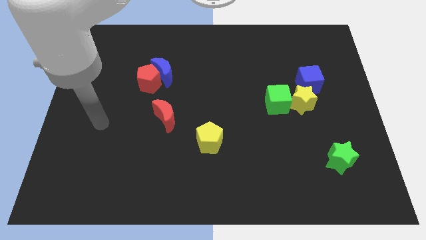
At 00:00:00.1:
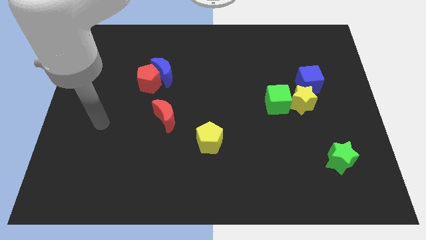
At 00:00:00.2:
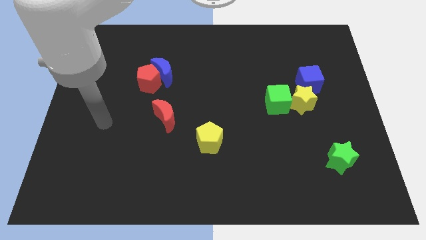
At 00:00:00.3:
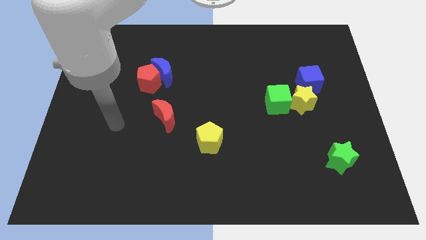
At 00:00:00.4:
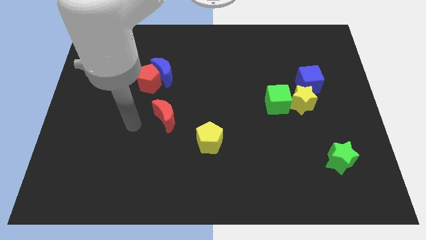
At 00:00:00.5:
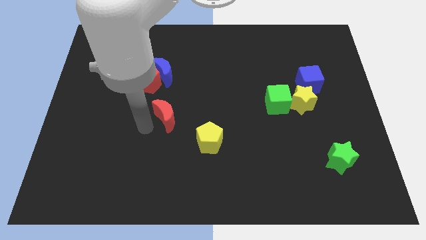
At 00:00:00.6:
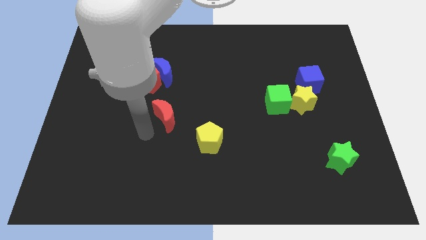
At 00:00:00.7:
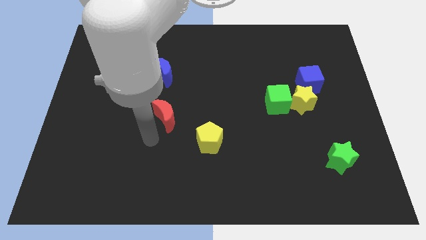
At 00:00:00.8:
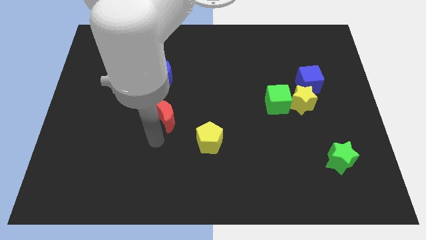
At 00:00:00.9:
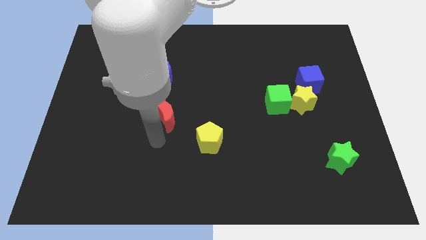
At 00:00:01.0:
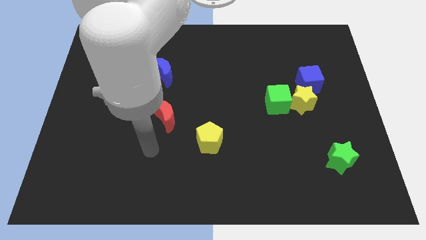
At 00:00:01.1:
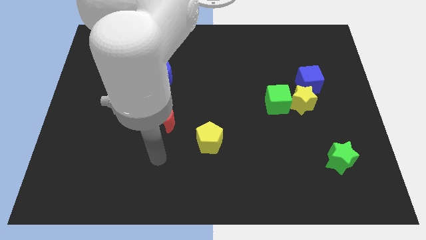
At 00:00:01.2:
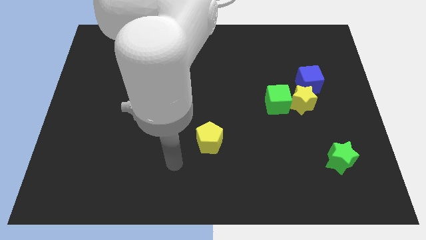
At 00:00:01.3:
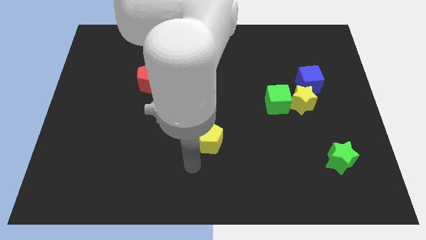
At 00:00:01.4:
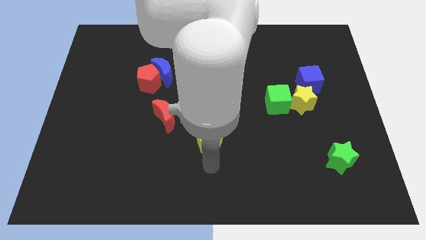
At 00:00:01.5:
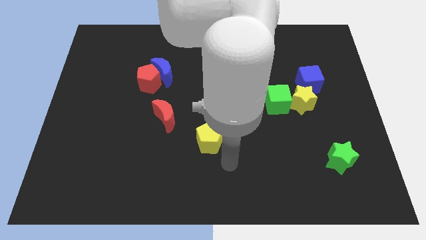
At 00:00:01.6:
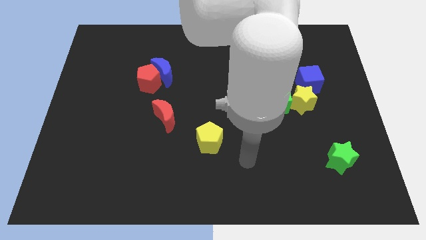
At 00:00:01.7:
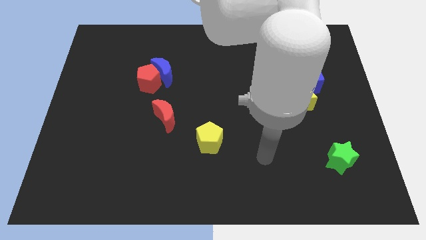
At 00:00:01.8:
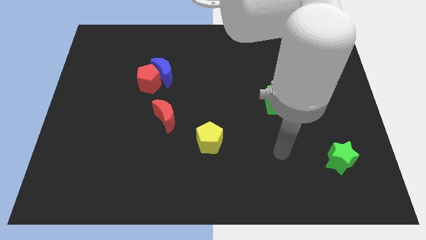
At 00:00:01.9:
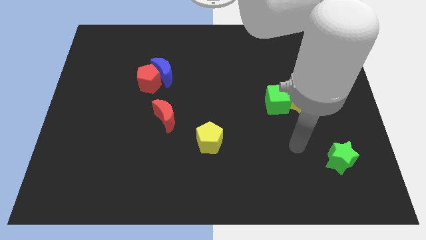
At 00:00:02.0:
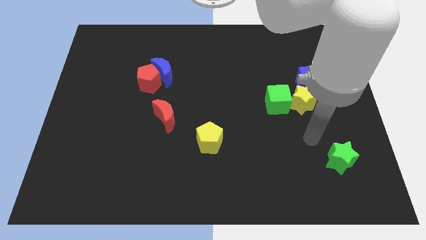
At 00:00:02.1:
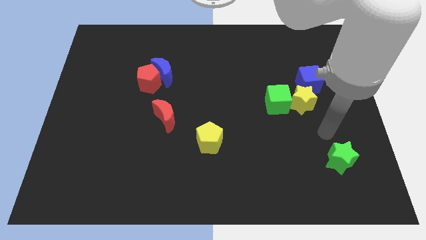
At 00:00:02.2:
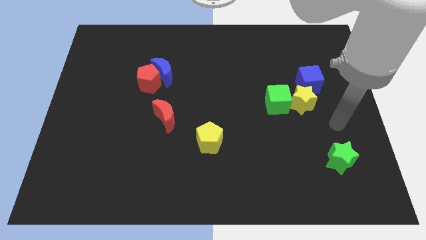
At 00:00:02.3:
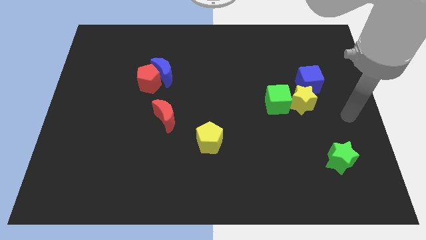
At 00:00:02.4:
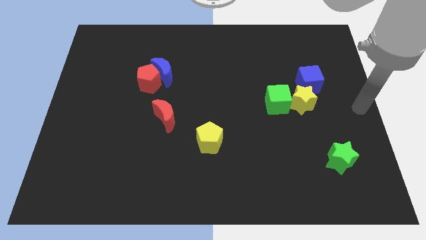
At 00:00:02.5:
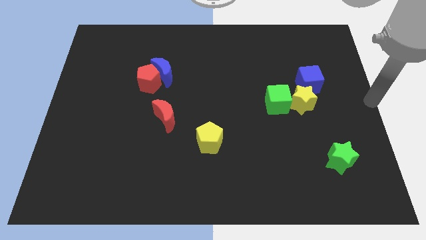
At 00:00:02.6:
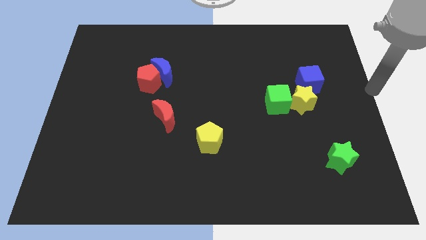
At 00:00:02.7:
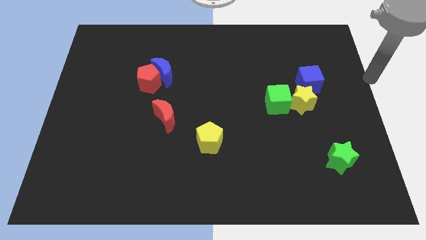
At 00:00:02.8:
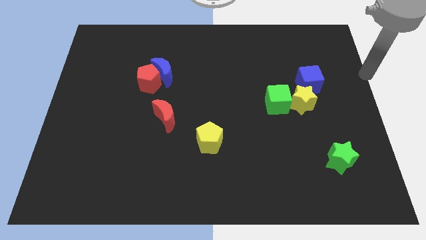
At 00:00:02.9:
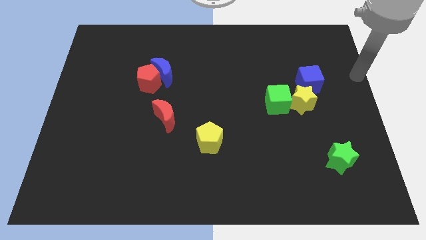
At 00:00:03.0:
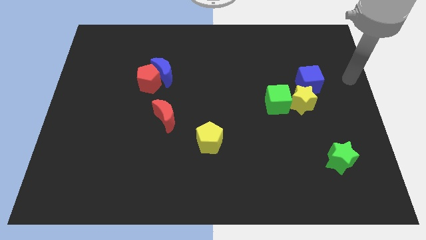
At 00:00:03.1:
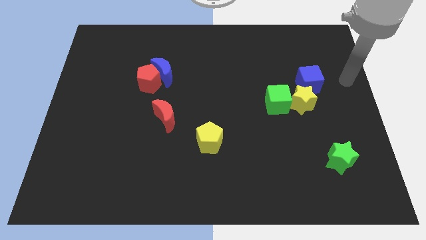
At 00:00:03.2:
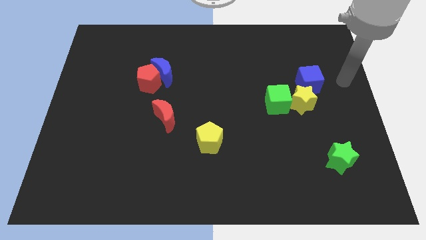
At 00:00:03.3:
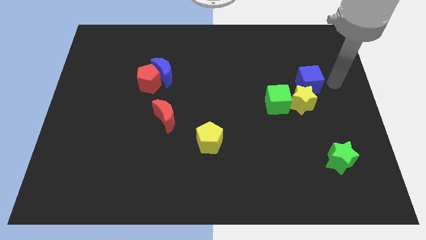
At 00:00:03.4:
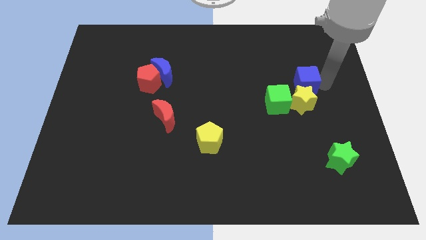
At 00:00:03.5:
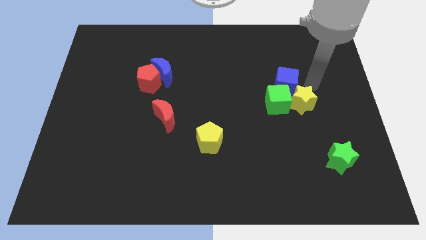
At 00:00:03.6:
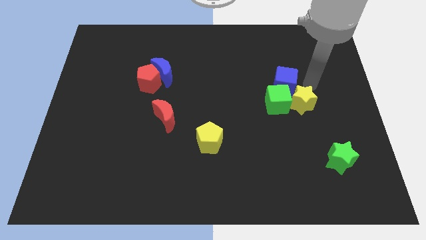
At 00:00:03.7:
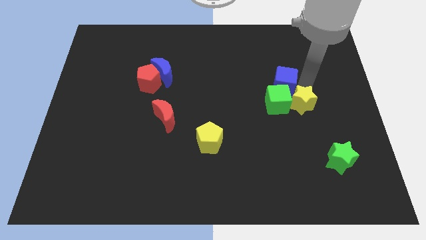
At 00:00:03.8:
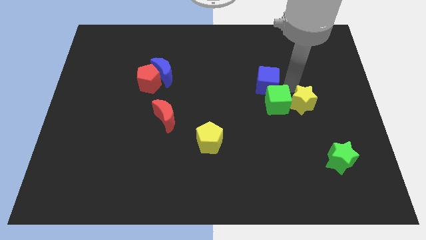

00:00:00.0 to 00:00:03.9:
push blue cube above green cube

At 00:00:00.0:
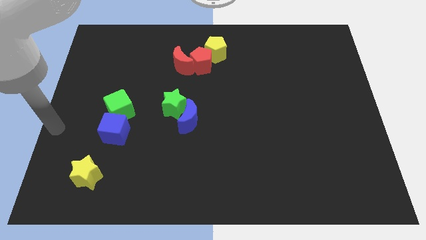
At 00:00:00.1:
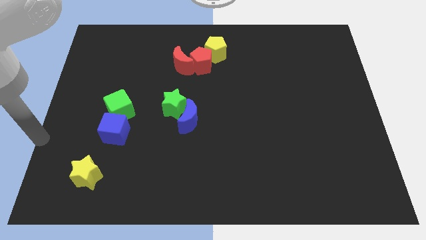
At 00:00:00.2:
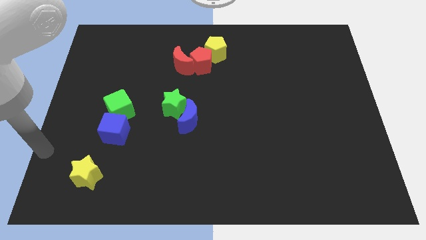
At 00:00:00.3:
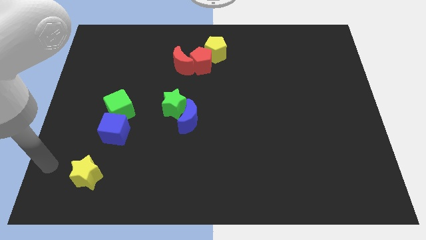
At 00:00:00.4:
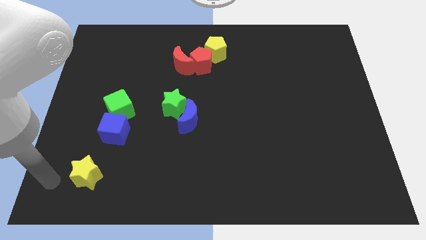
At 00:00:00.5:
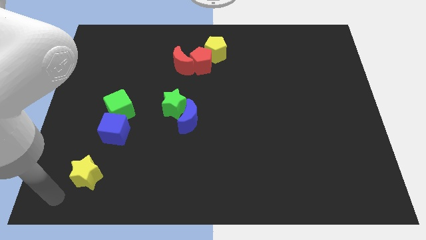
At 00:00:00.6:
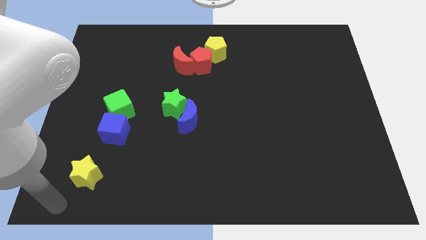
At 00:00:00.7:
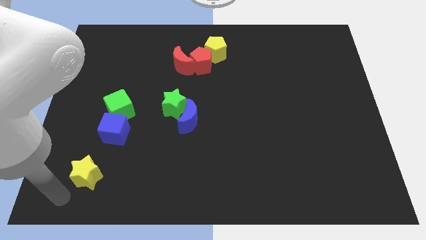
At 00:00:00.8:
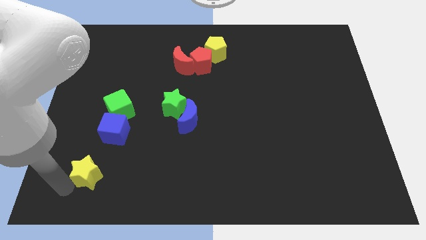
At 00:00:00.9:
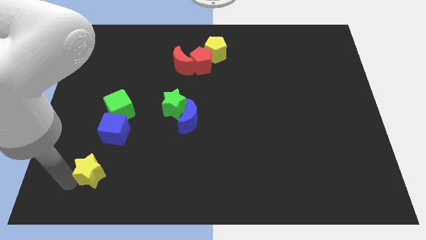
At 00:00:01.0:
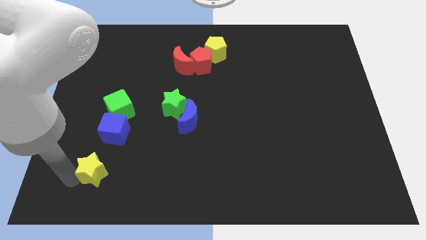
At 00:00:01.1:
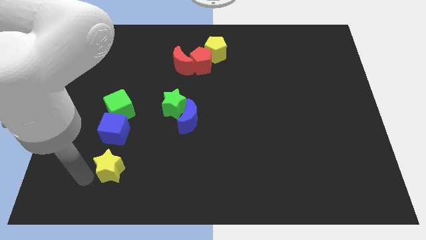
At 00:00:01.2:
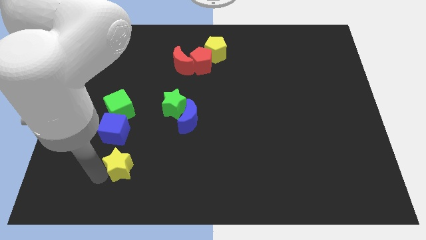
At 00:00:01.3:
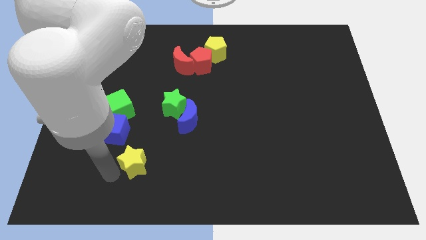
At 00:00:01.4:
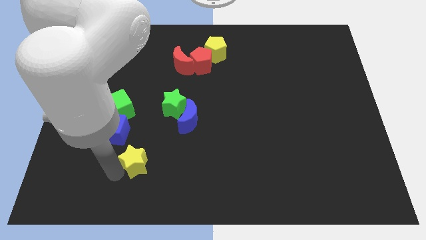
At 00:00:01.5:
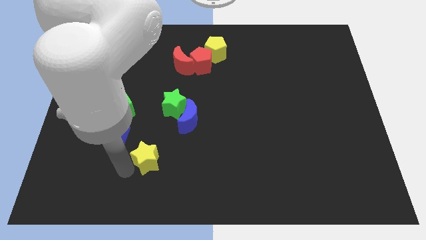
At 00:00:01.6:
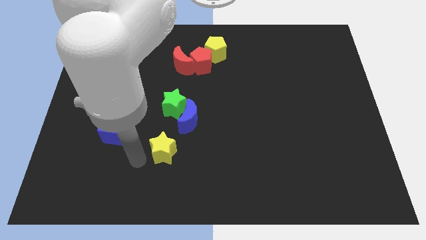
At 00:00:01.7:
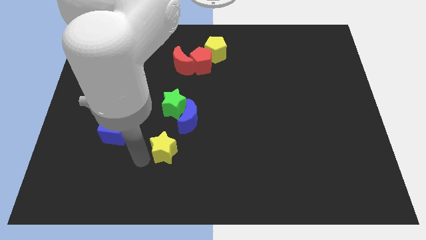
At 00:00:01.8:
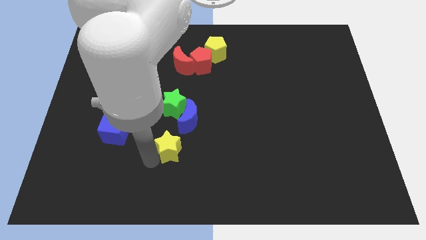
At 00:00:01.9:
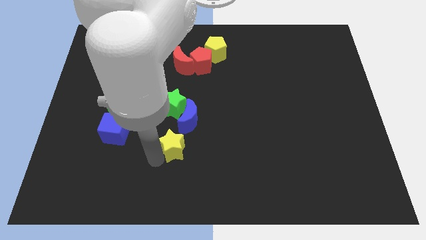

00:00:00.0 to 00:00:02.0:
move the yellow star below the green star vertically

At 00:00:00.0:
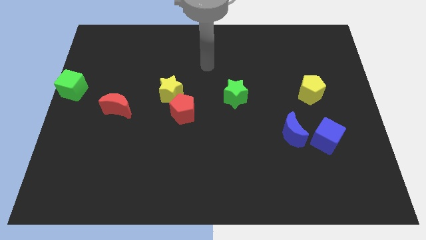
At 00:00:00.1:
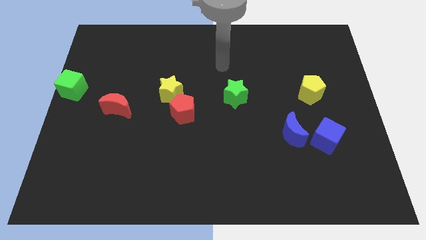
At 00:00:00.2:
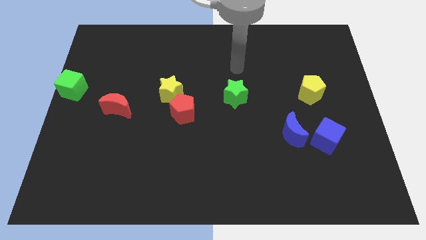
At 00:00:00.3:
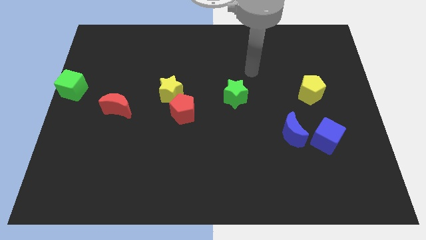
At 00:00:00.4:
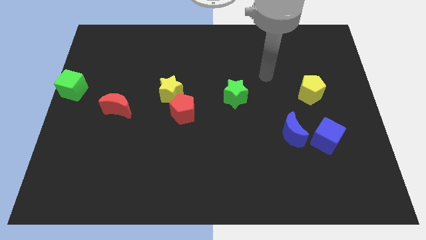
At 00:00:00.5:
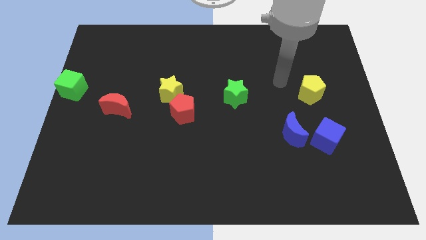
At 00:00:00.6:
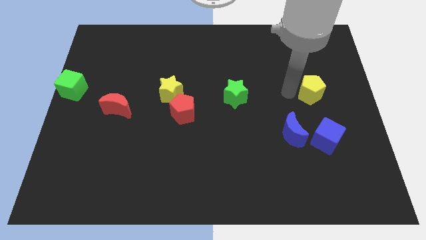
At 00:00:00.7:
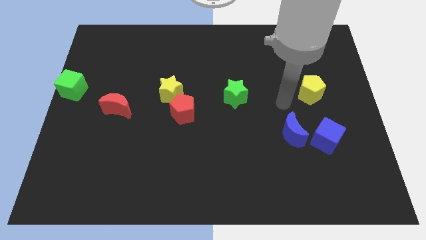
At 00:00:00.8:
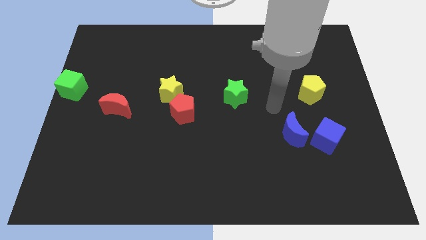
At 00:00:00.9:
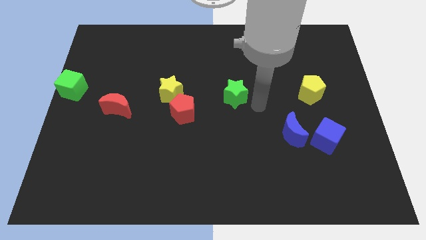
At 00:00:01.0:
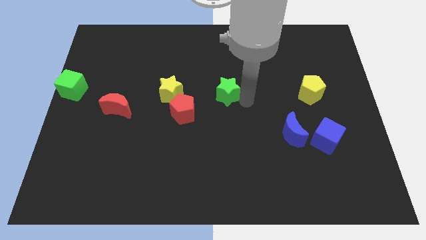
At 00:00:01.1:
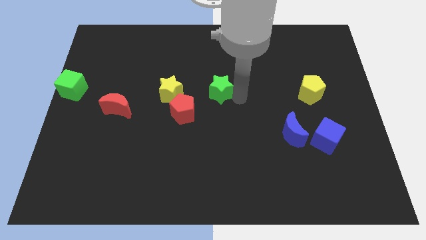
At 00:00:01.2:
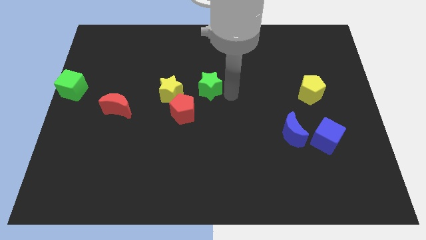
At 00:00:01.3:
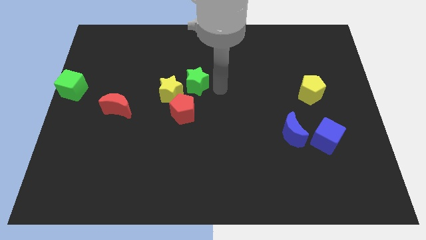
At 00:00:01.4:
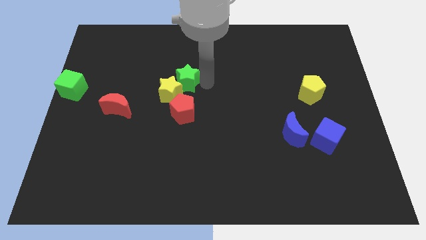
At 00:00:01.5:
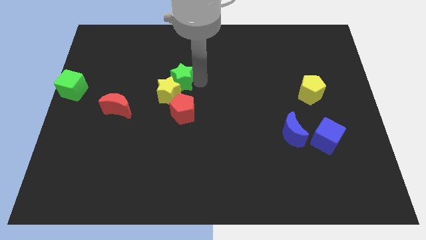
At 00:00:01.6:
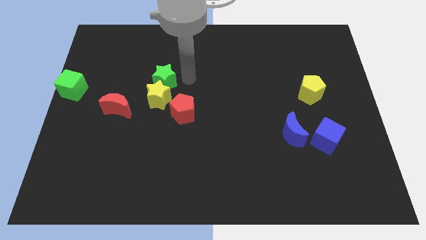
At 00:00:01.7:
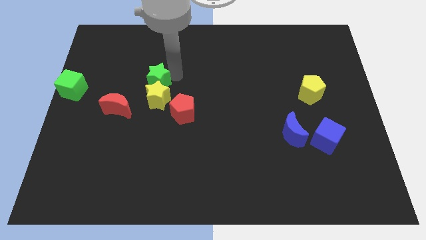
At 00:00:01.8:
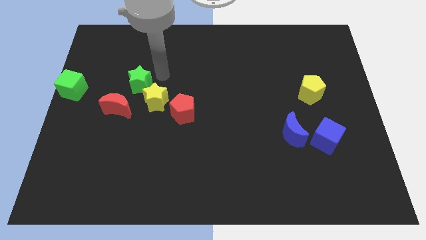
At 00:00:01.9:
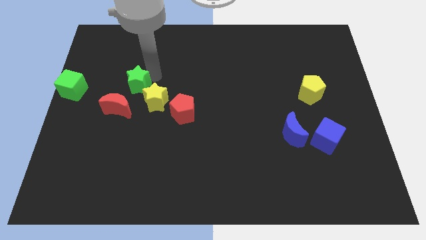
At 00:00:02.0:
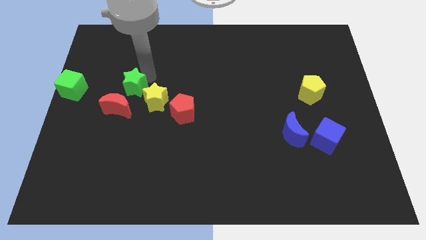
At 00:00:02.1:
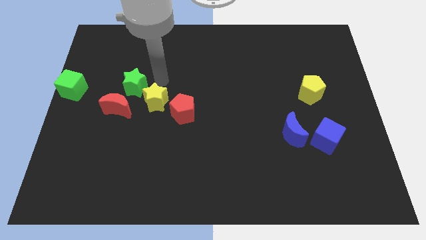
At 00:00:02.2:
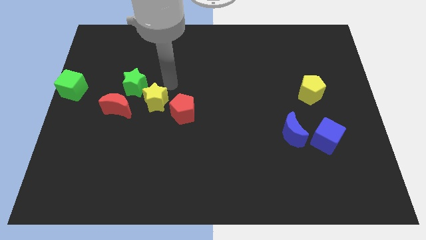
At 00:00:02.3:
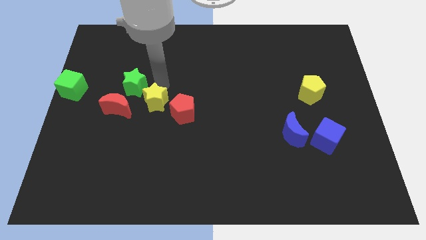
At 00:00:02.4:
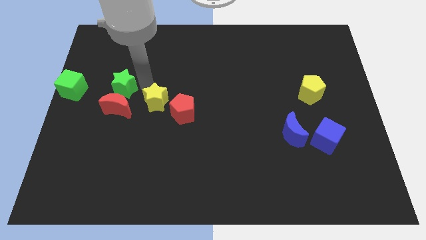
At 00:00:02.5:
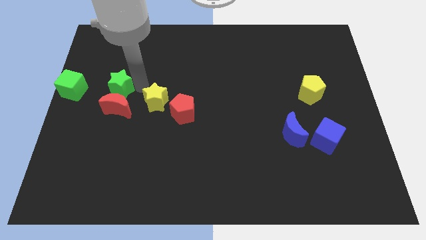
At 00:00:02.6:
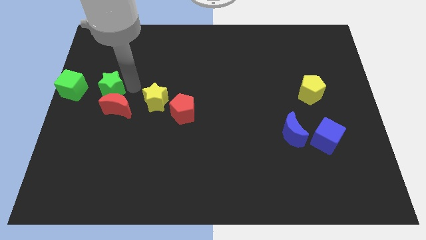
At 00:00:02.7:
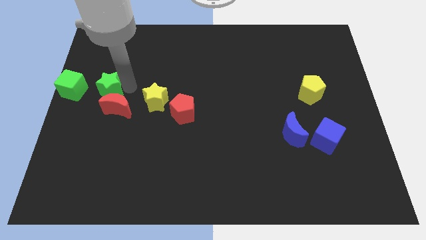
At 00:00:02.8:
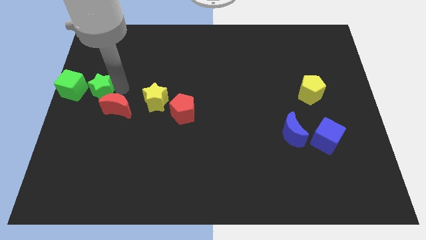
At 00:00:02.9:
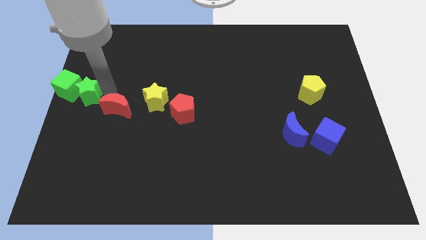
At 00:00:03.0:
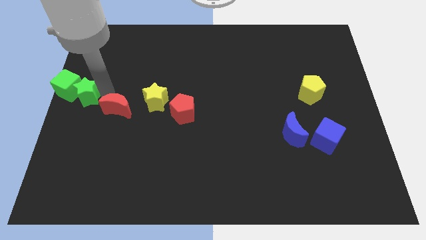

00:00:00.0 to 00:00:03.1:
push the green star into the yellow star
